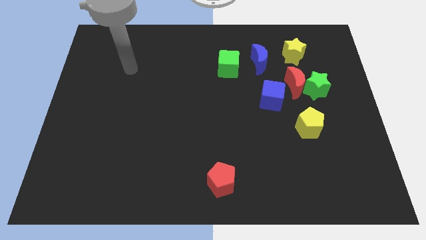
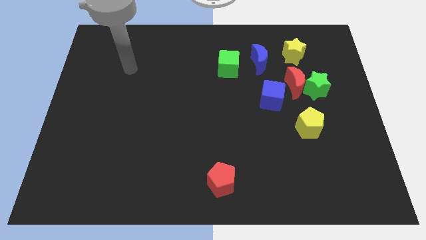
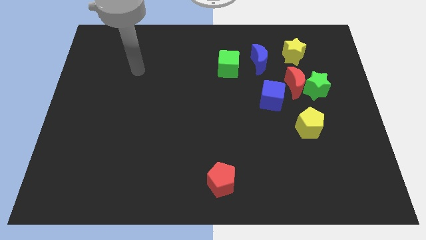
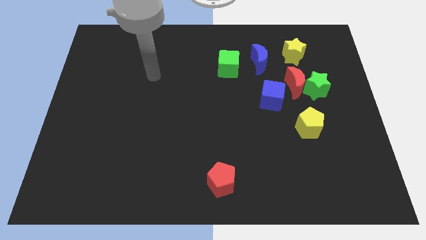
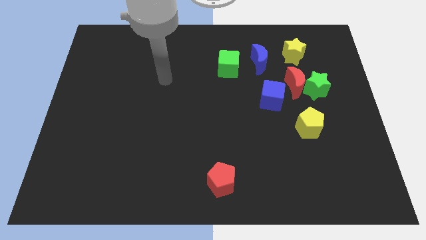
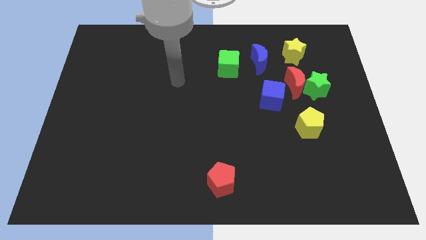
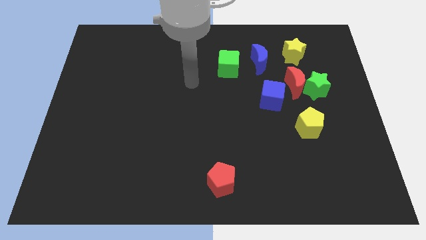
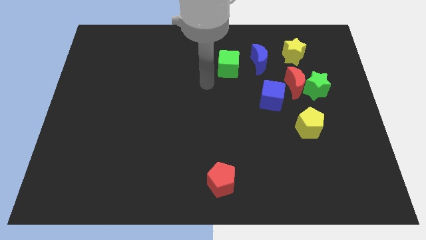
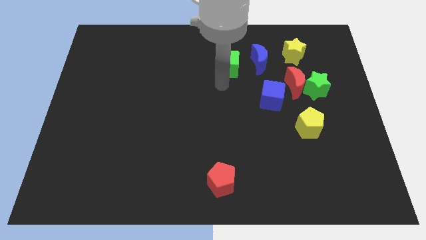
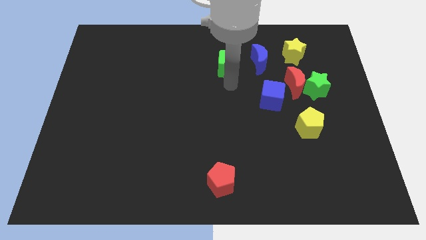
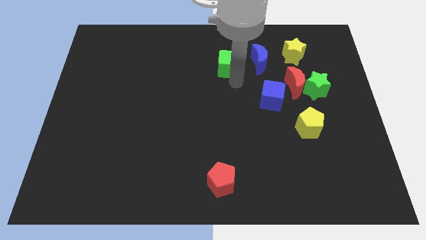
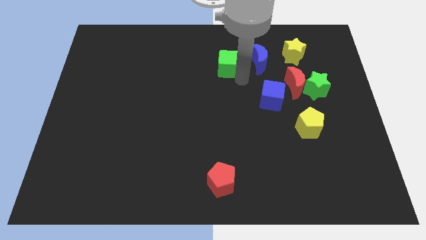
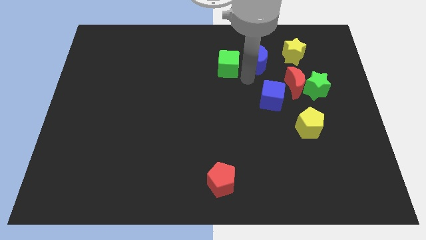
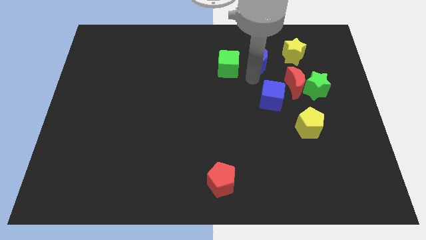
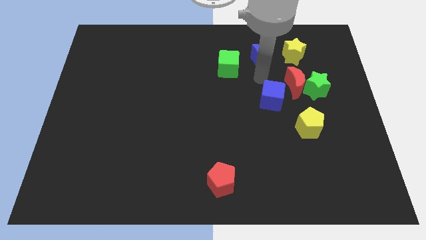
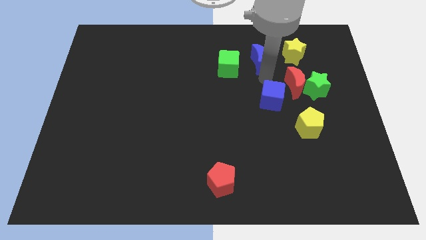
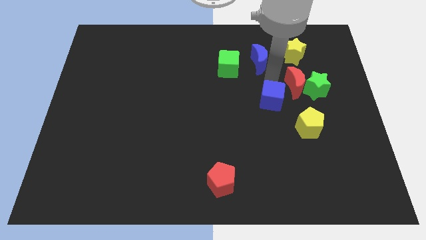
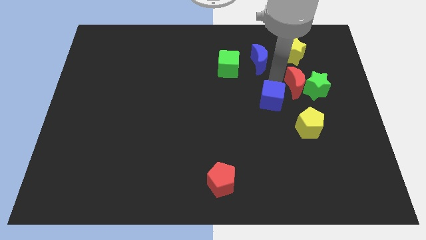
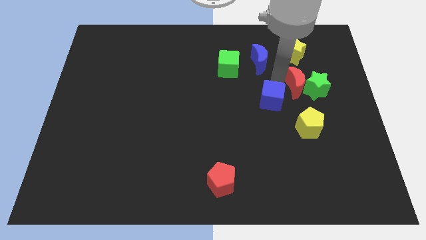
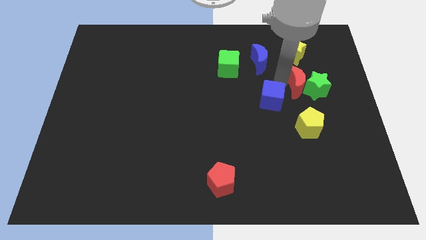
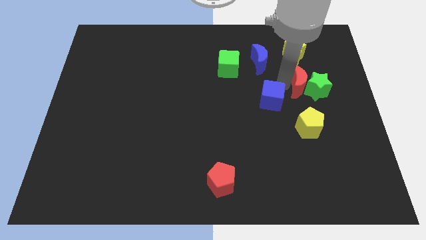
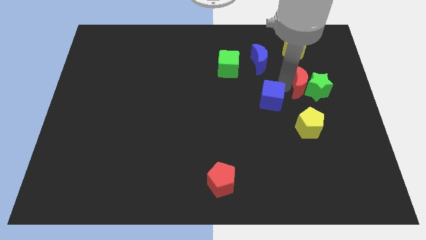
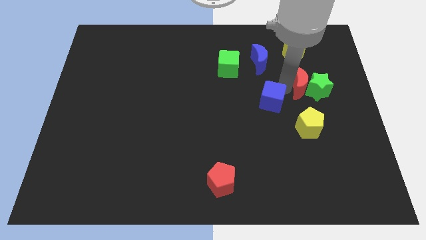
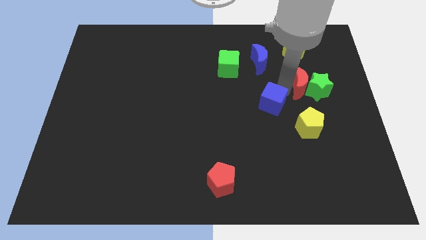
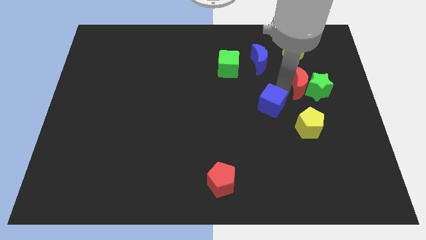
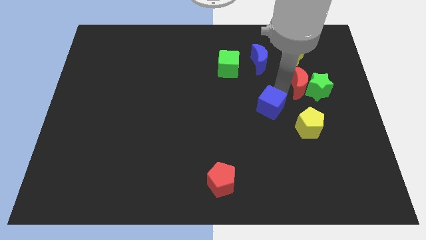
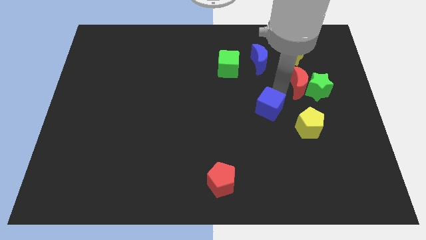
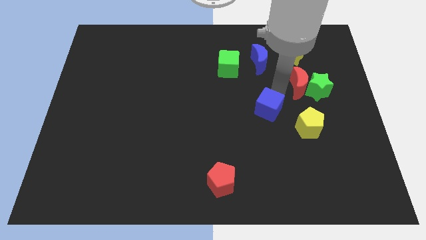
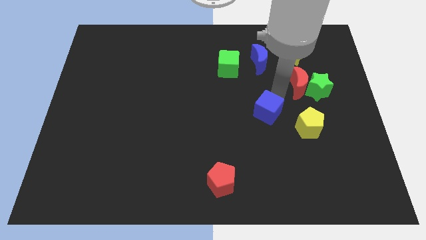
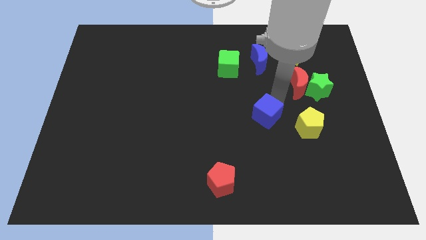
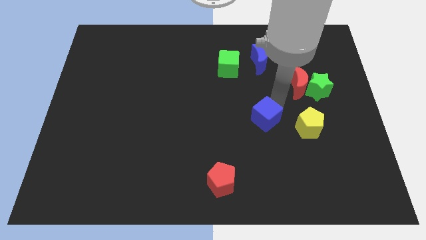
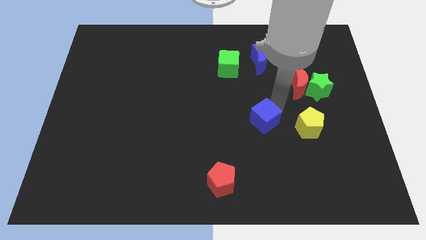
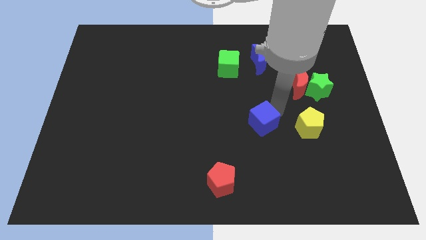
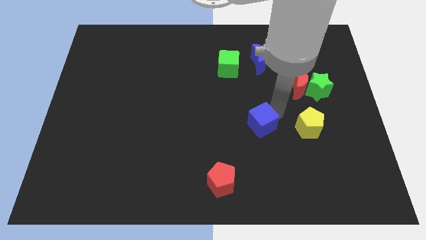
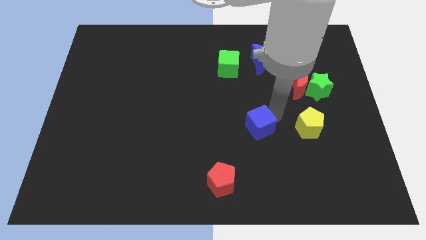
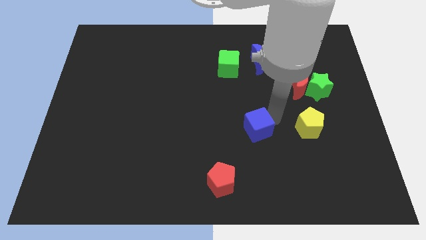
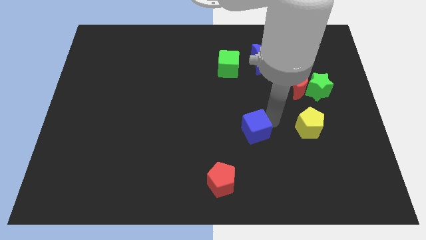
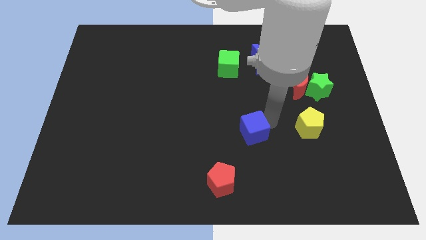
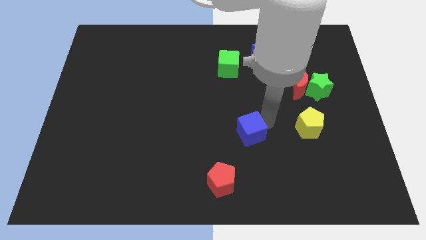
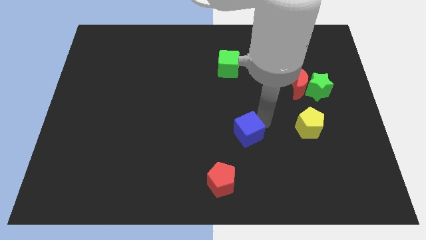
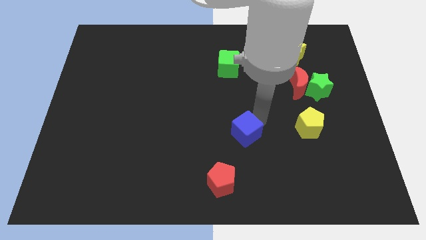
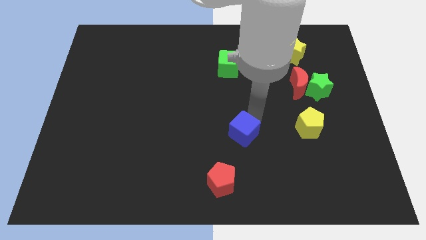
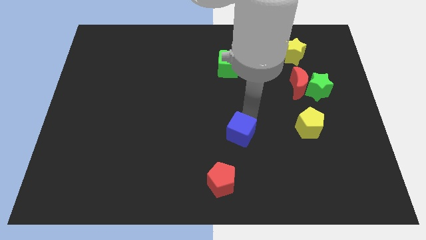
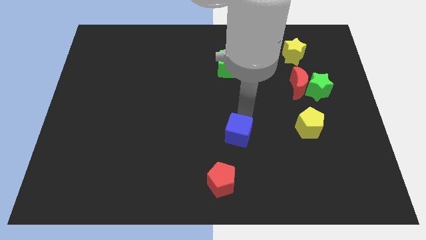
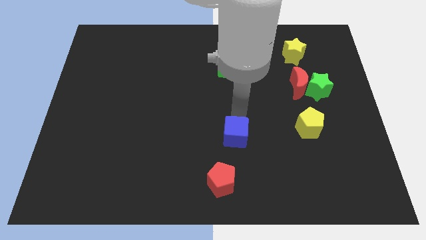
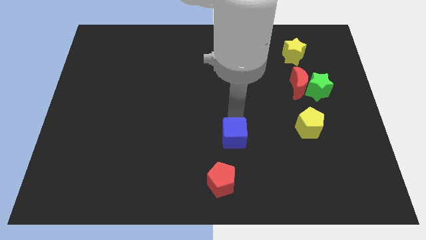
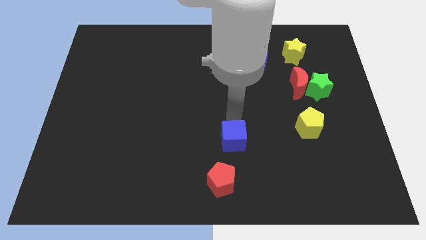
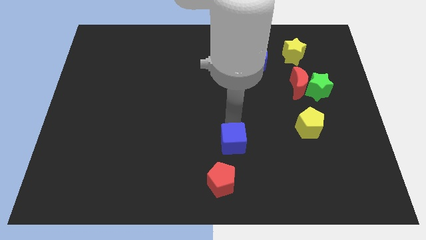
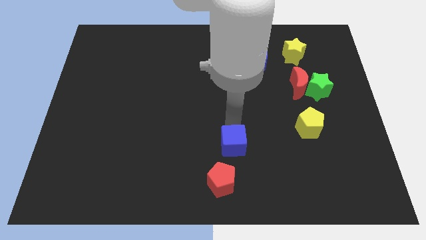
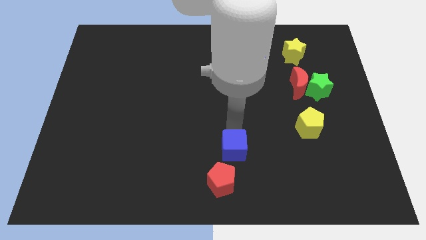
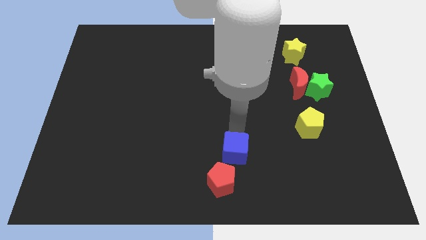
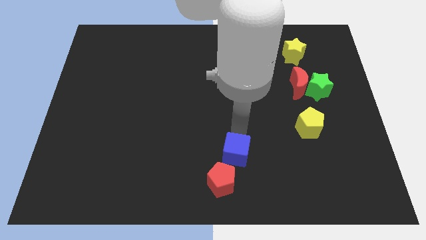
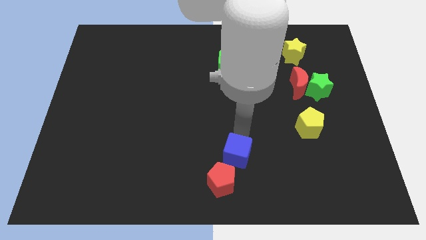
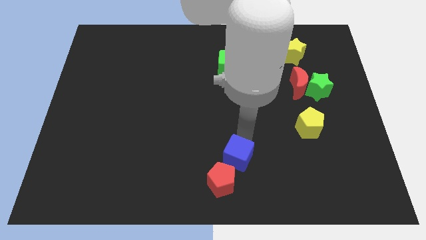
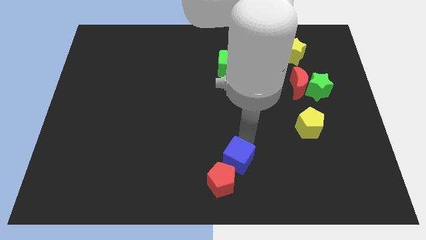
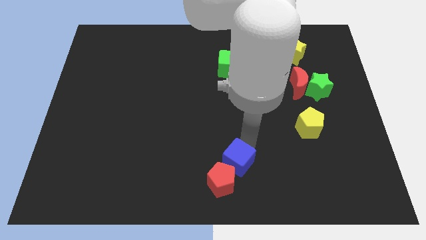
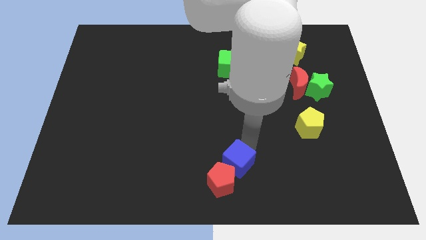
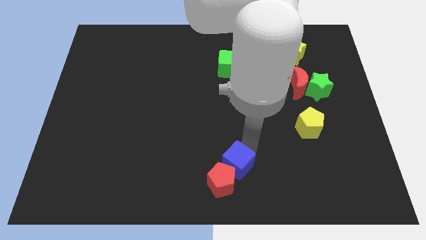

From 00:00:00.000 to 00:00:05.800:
push the blue cube close to the red pentagon

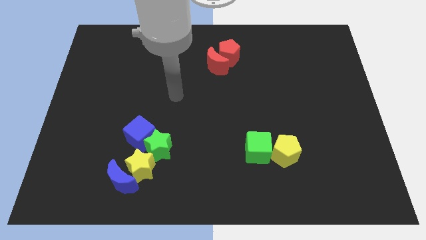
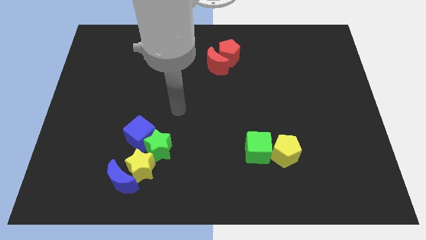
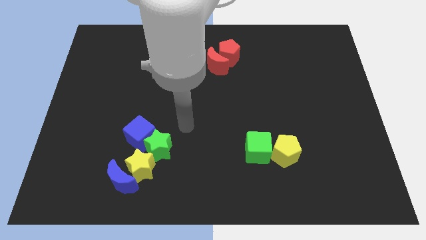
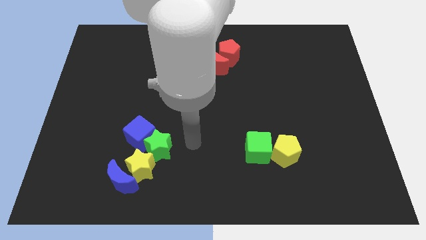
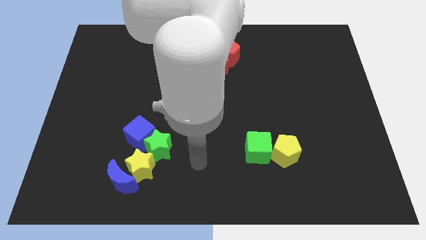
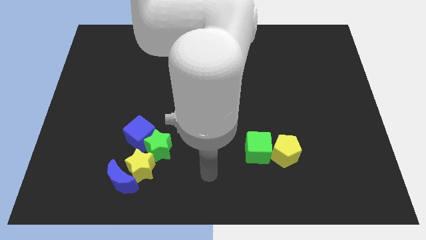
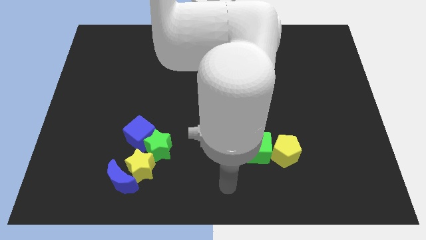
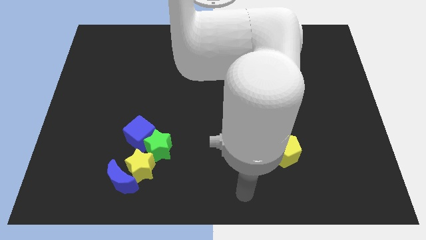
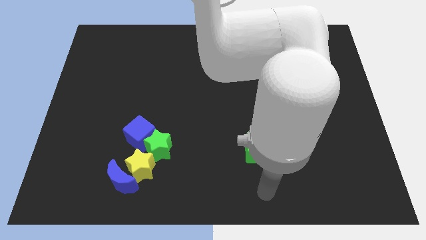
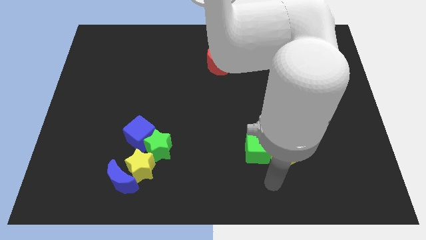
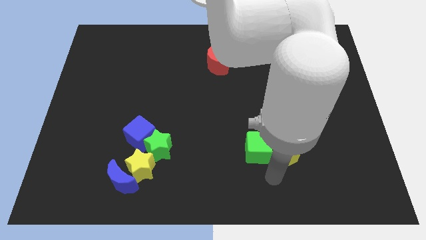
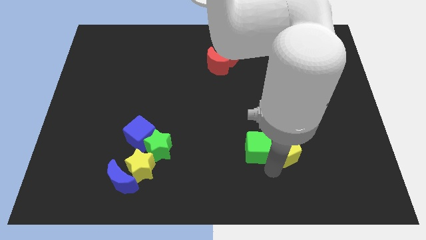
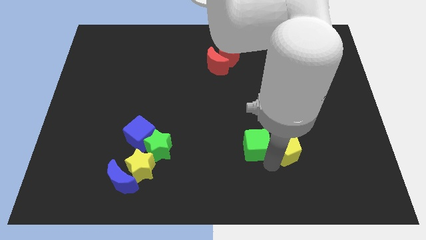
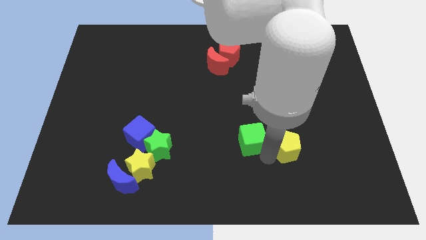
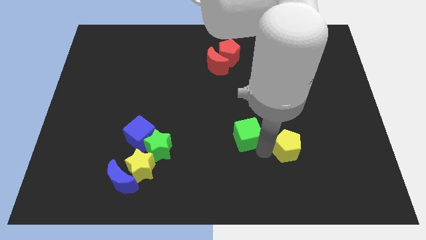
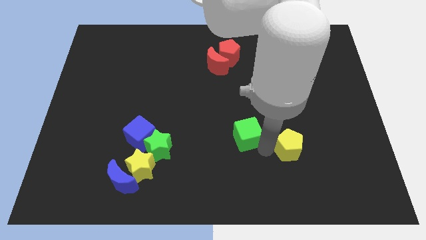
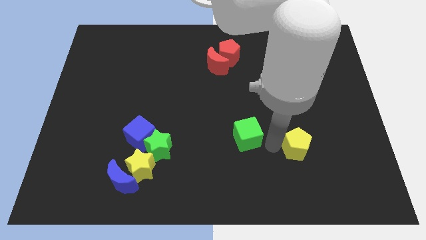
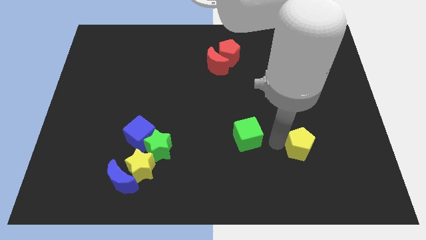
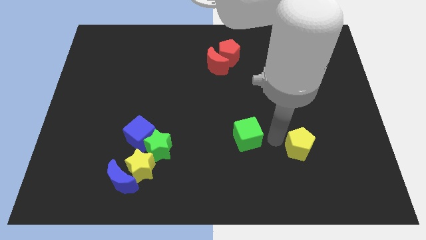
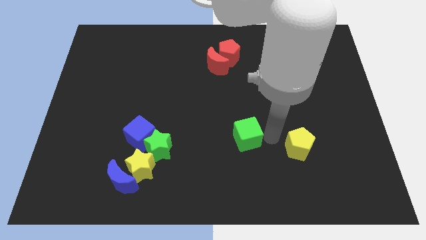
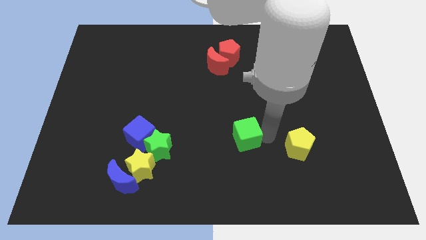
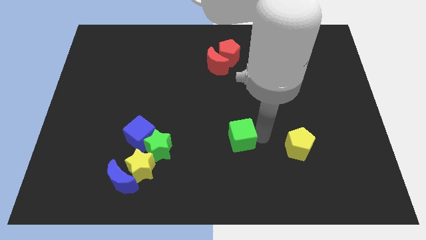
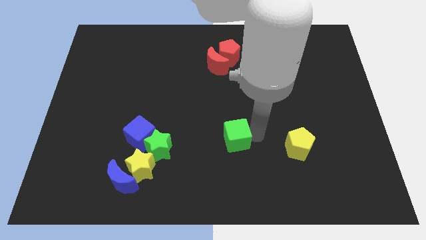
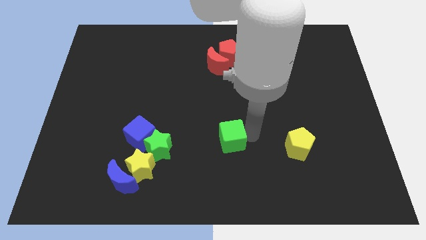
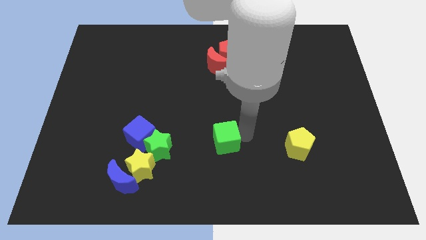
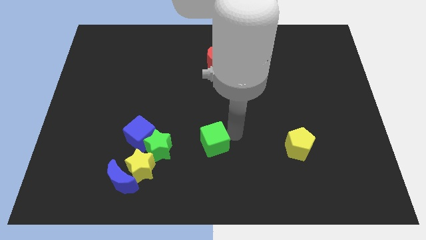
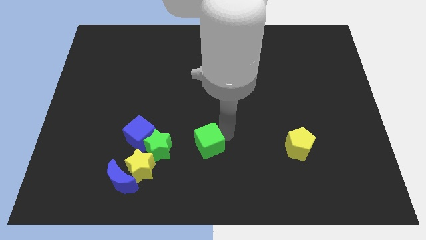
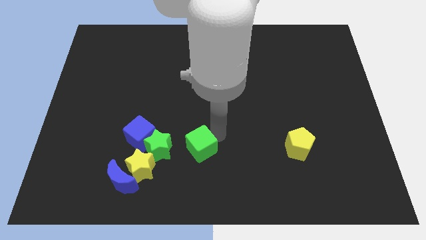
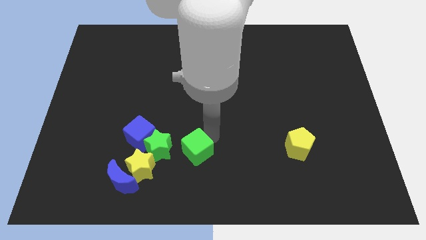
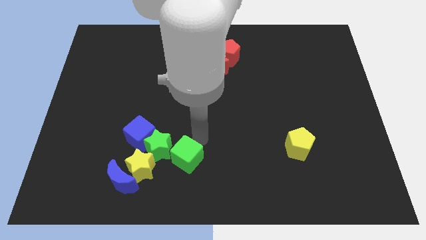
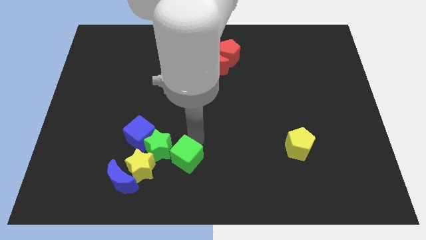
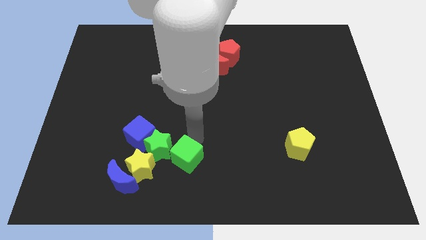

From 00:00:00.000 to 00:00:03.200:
put the green cube towards the green star
